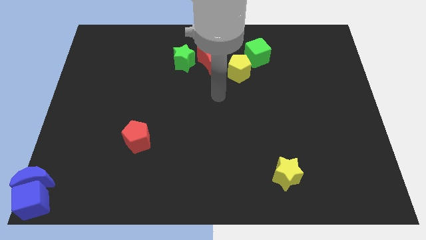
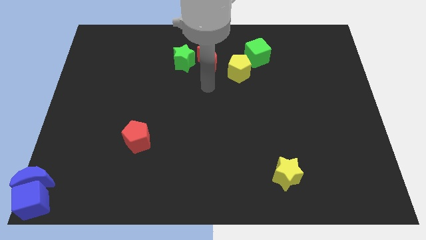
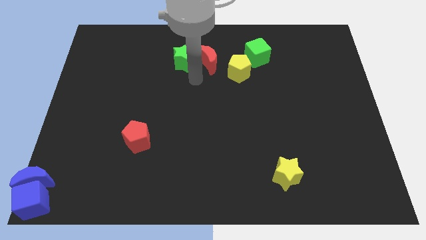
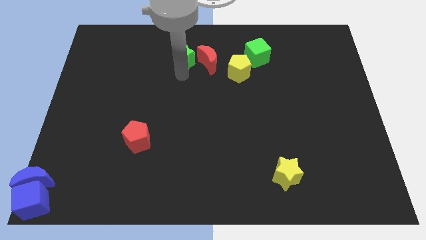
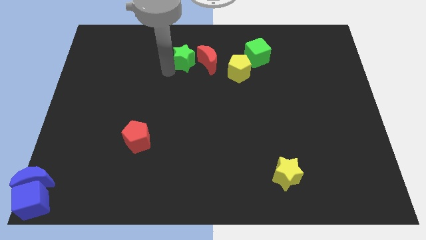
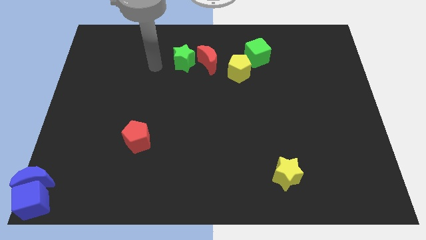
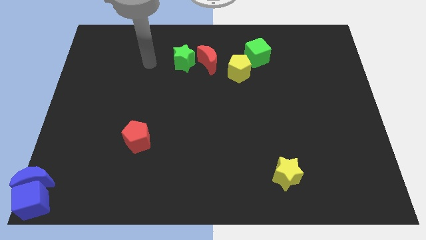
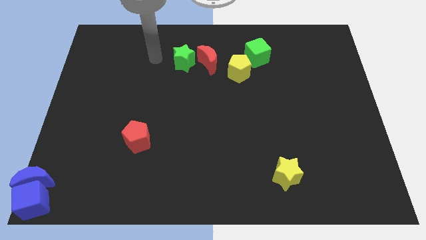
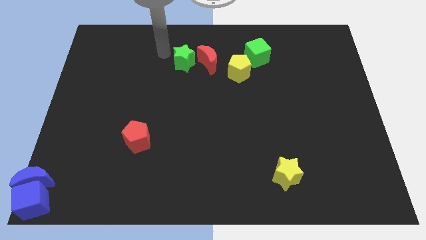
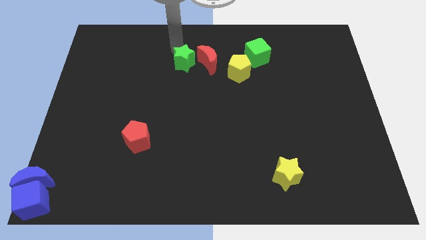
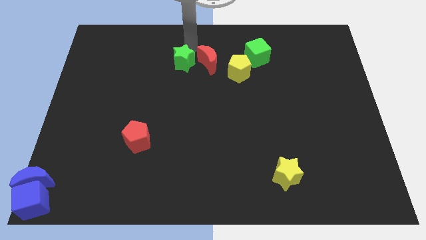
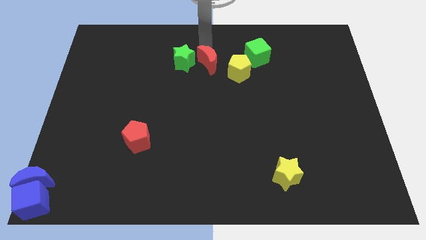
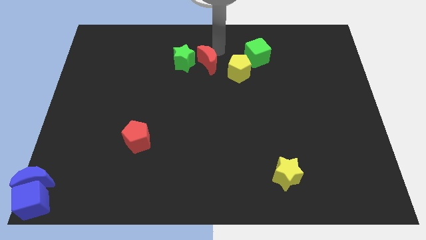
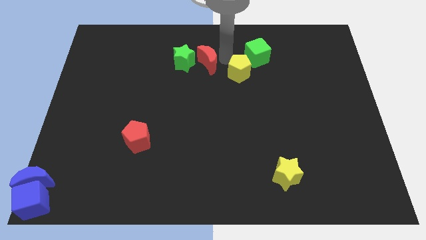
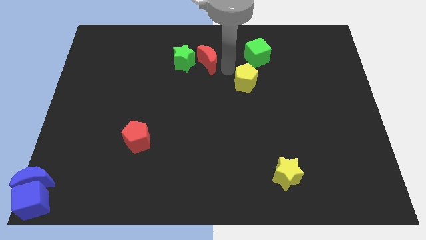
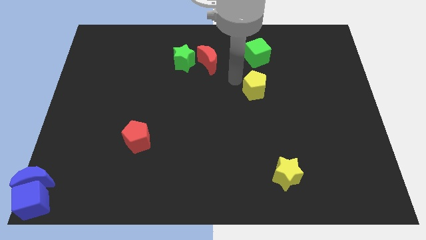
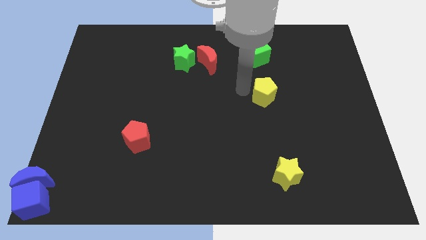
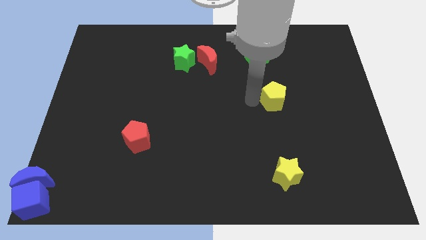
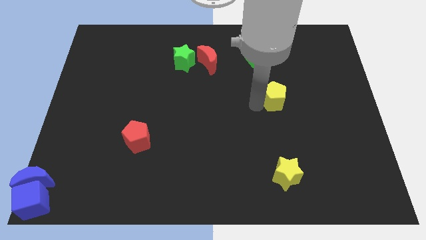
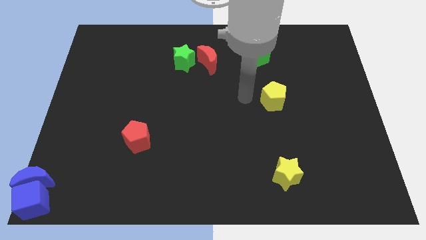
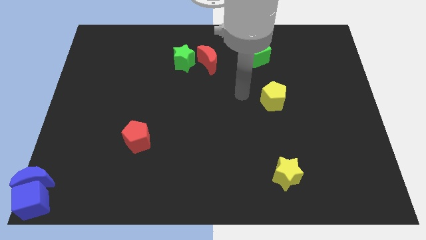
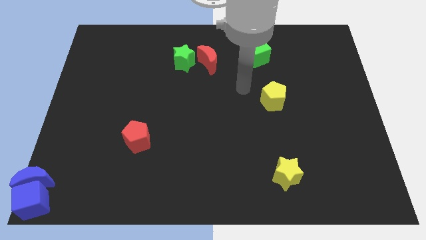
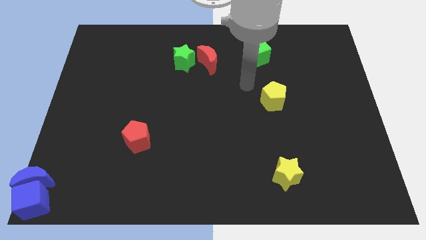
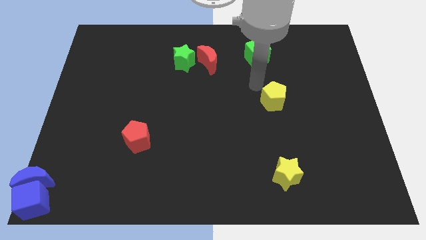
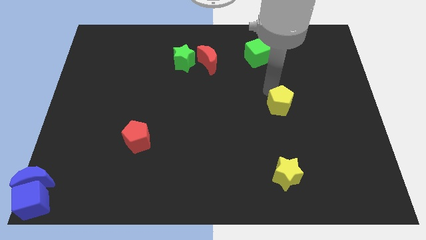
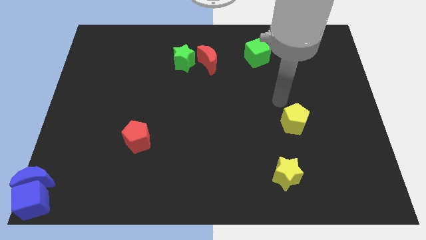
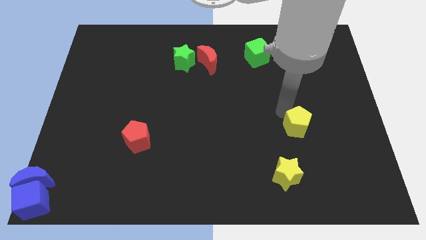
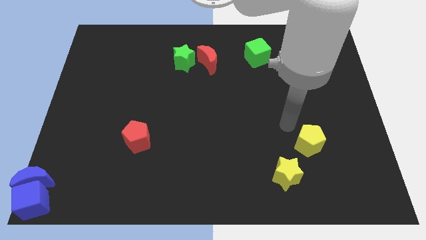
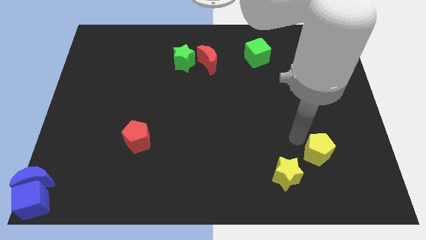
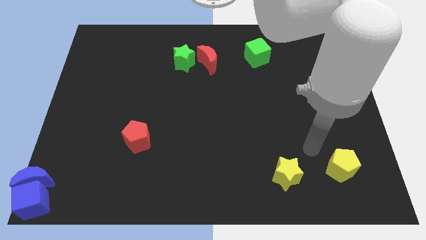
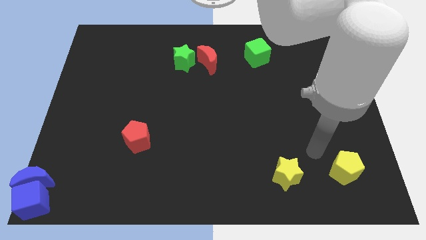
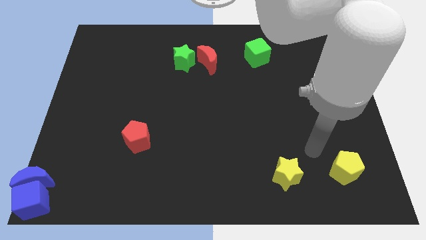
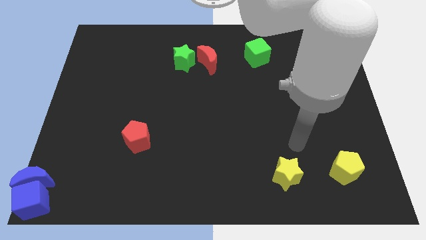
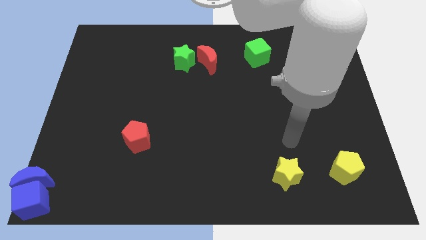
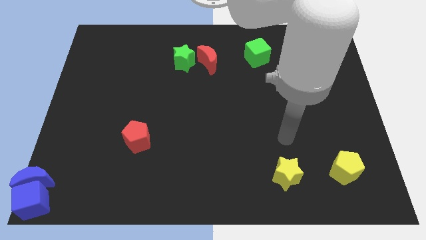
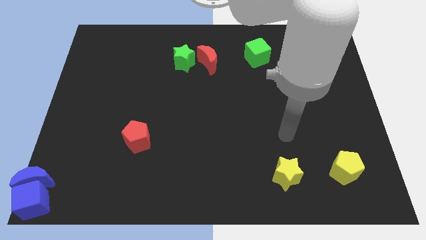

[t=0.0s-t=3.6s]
separate the yellow pentagon from the green cube

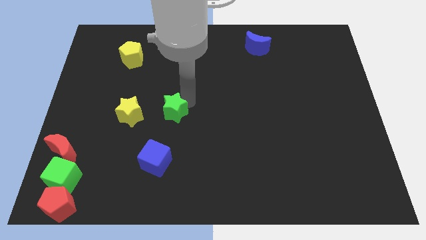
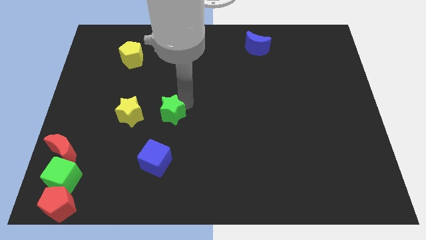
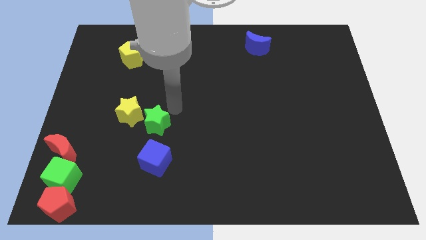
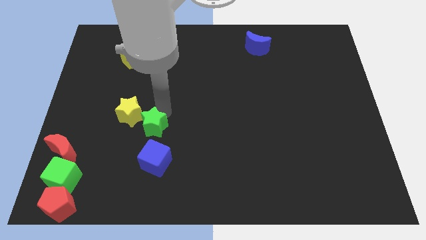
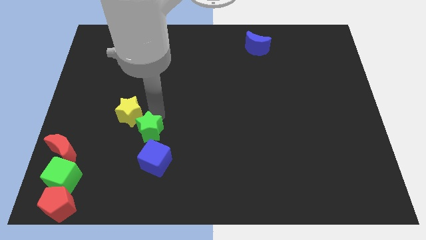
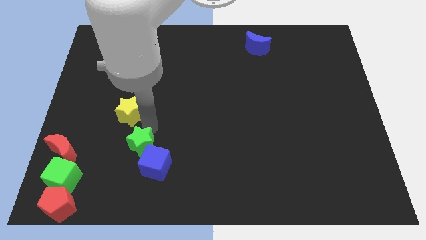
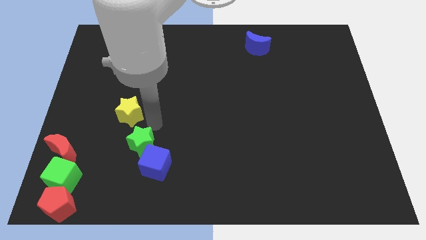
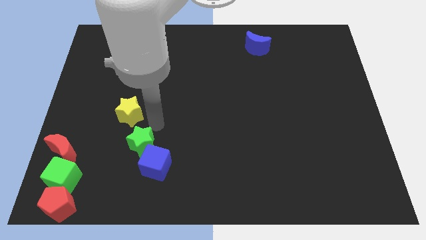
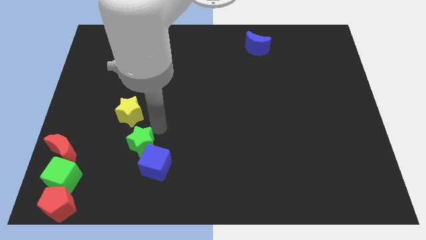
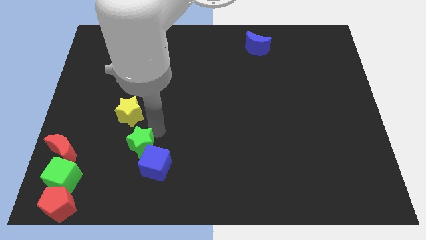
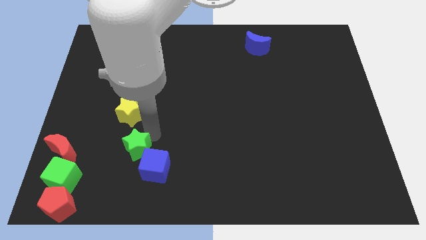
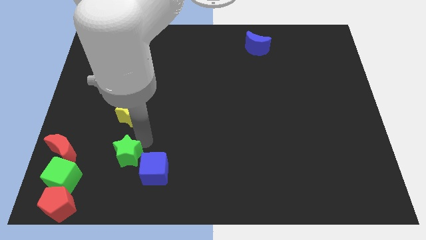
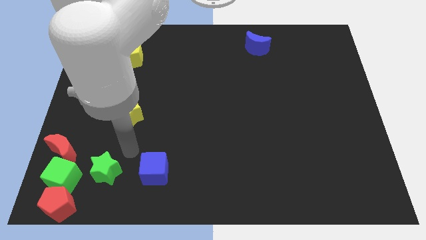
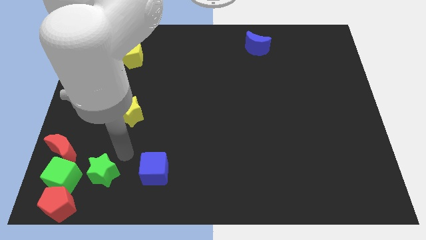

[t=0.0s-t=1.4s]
place green star left to the blue cube

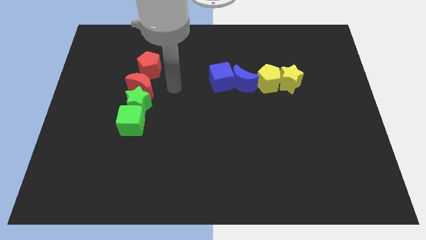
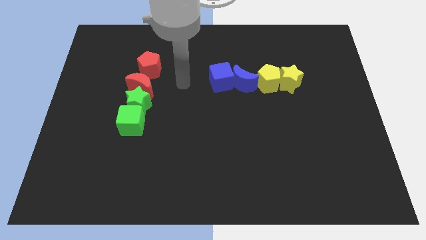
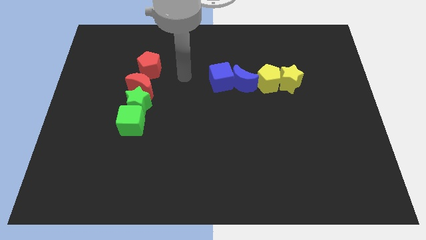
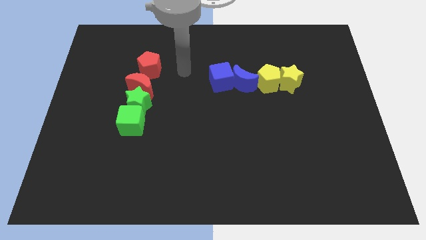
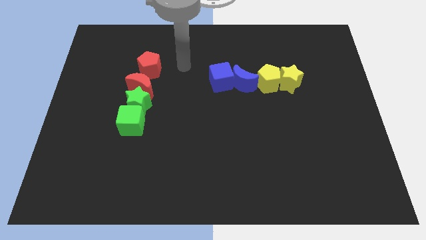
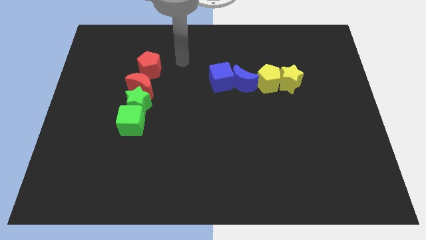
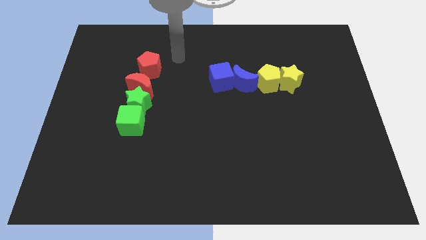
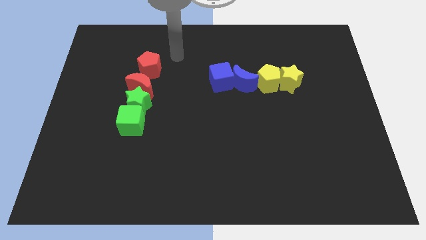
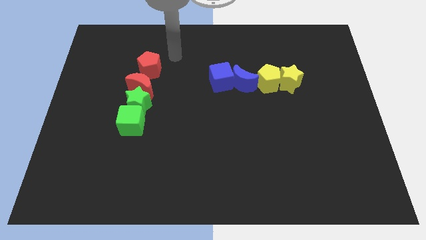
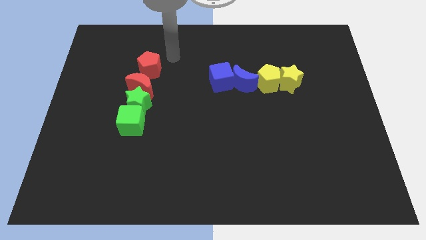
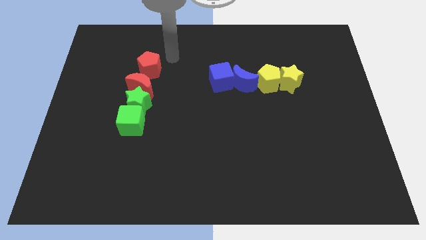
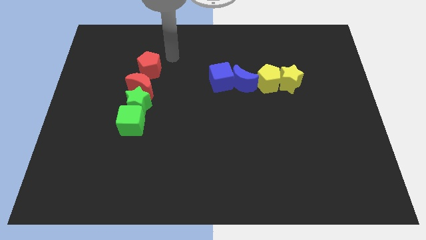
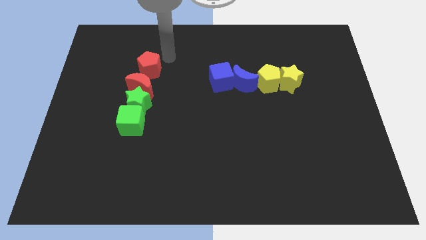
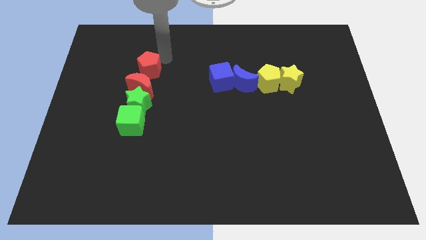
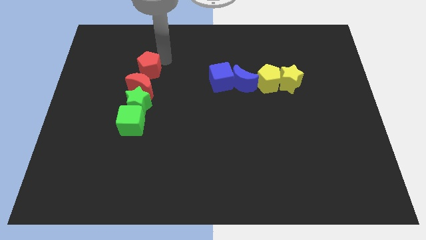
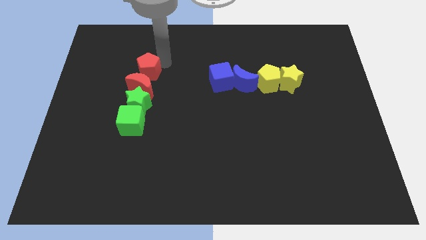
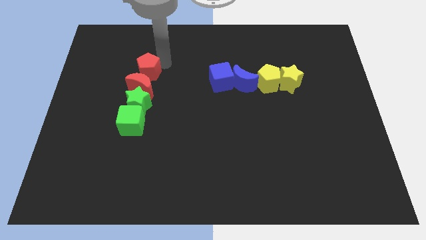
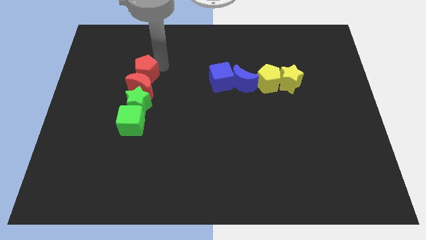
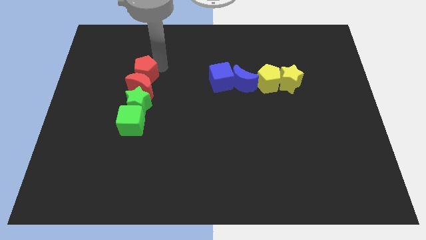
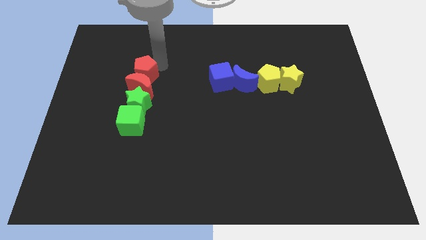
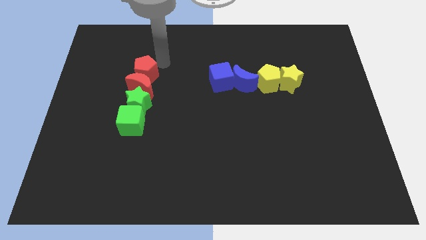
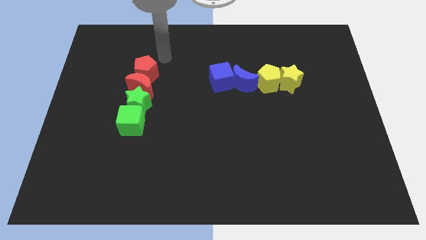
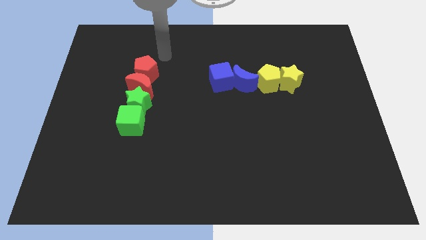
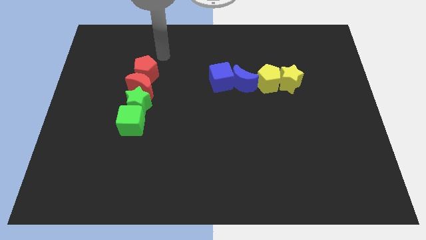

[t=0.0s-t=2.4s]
adjust red pentagon above the red moon

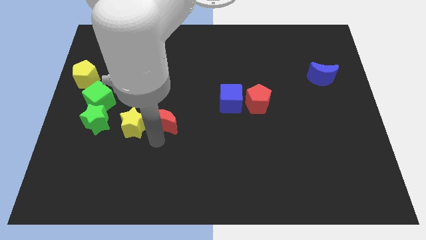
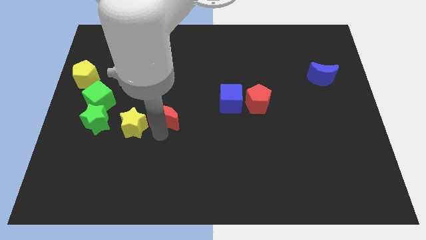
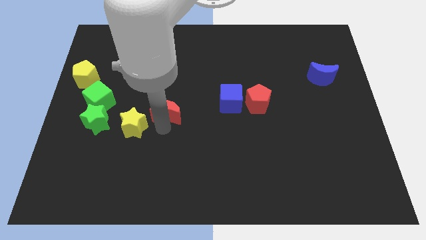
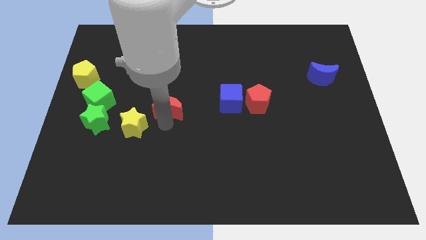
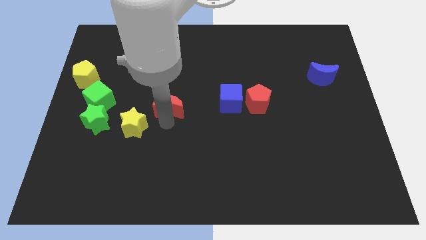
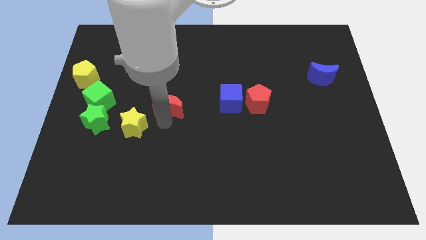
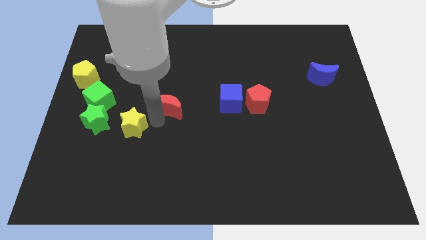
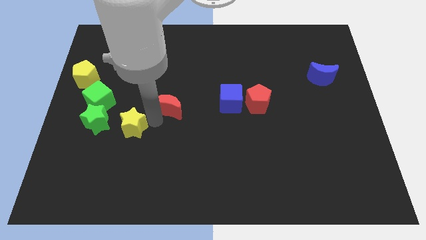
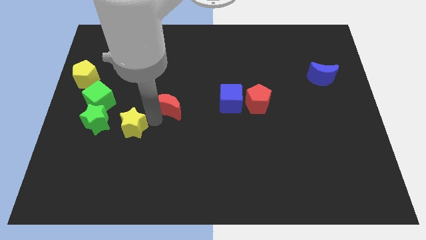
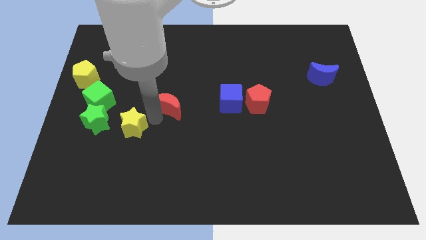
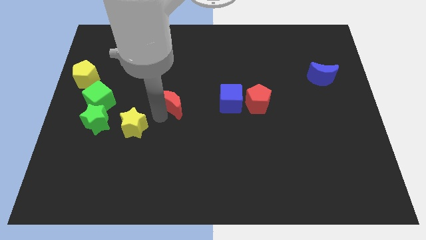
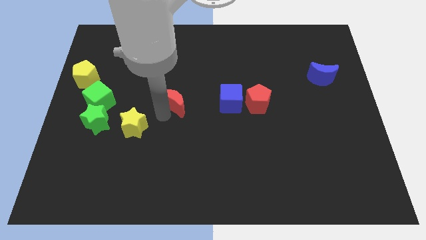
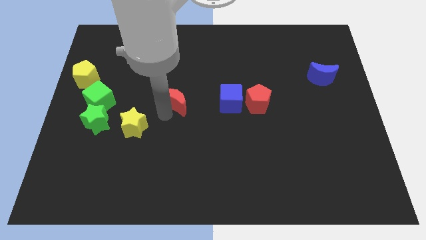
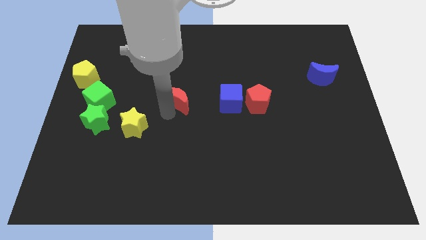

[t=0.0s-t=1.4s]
move the red crescent to the left of the blue cube

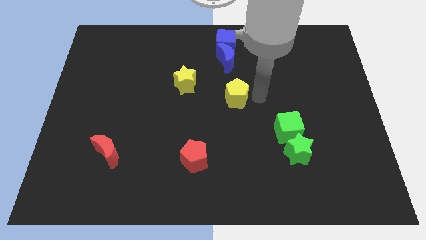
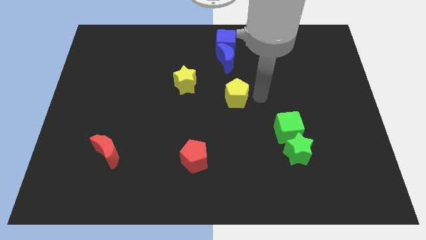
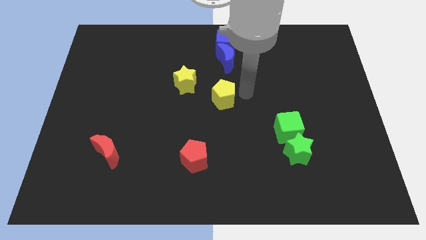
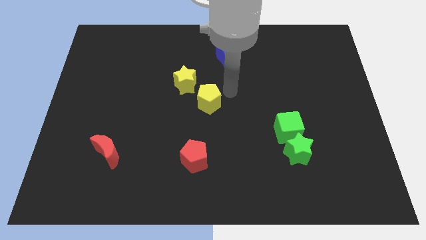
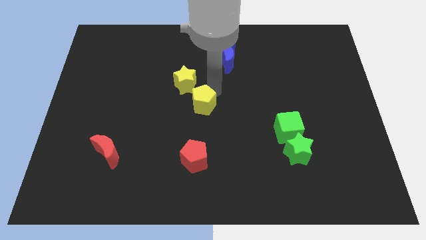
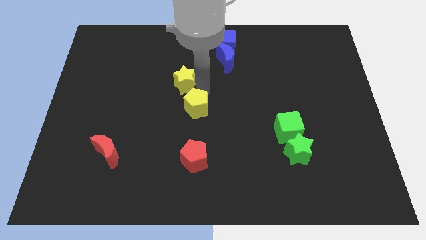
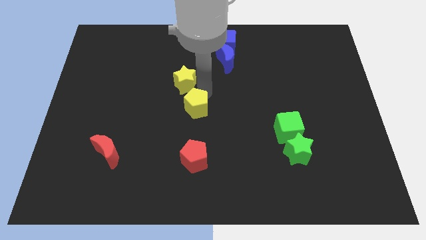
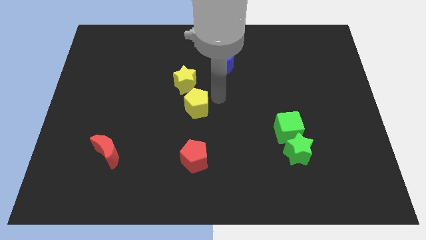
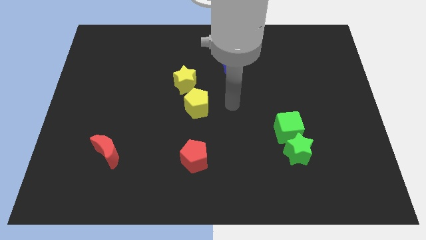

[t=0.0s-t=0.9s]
slide the yellow pentagon to the left
